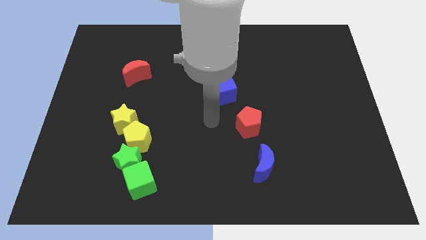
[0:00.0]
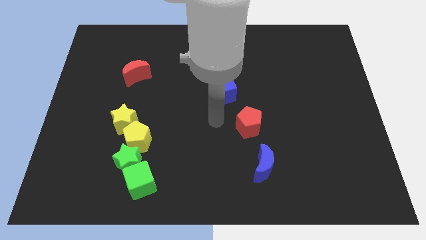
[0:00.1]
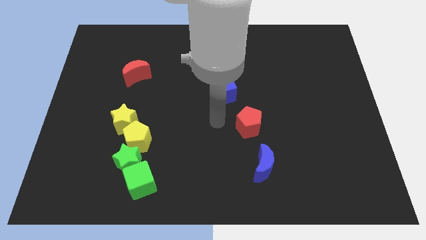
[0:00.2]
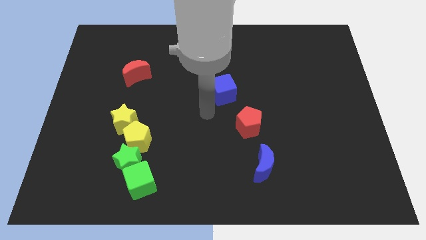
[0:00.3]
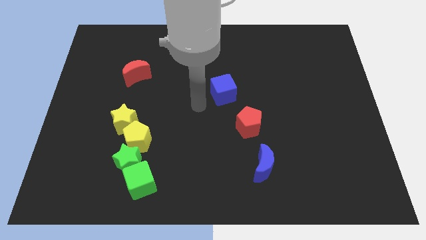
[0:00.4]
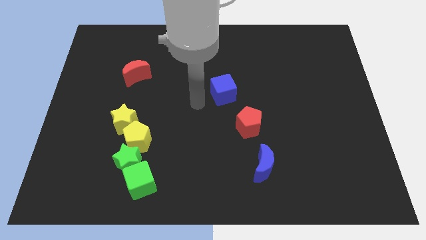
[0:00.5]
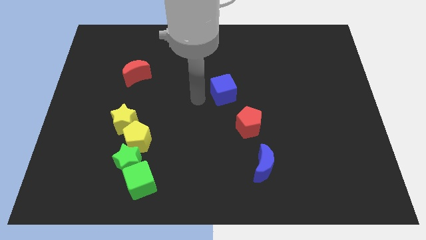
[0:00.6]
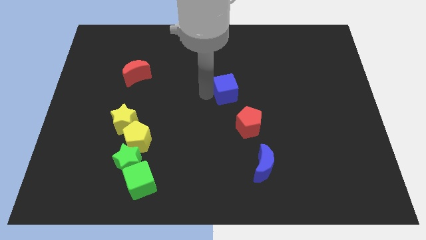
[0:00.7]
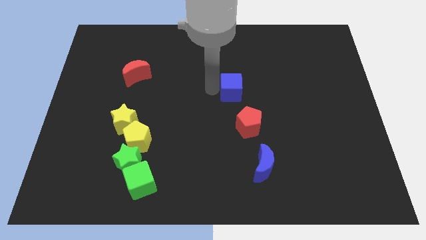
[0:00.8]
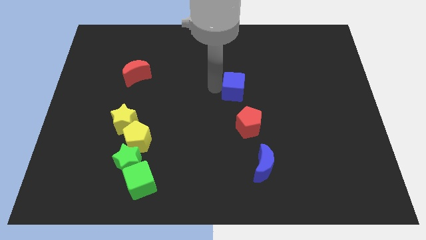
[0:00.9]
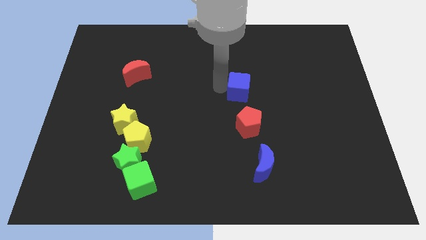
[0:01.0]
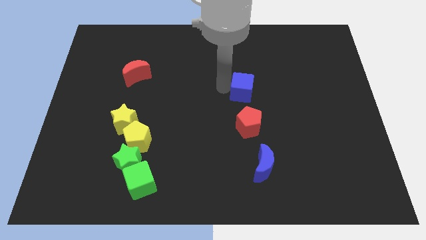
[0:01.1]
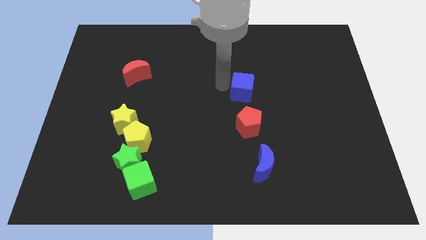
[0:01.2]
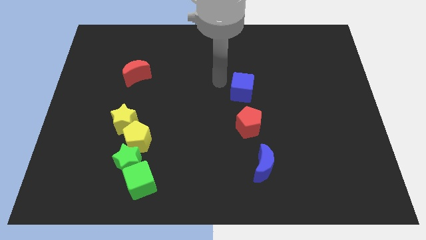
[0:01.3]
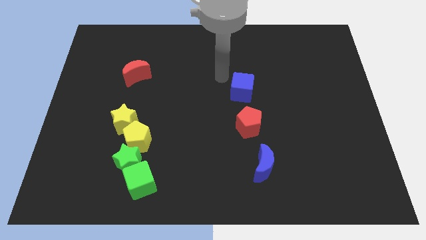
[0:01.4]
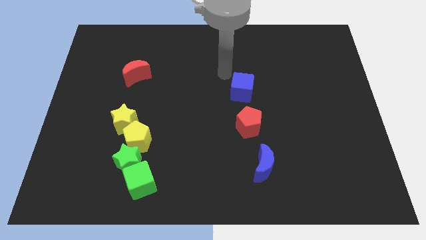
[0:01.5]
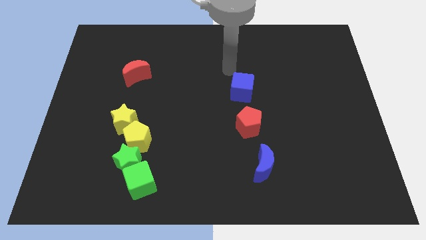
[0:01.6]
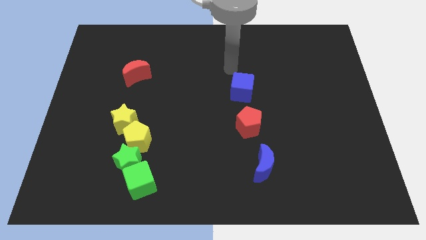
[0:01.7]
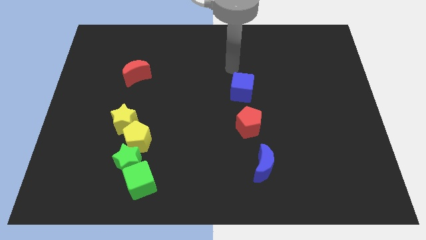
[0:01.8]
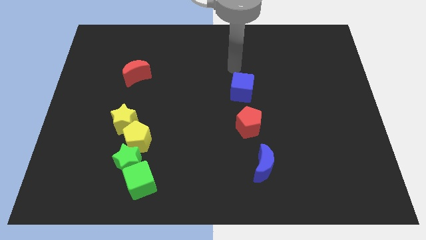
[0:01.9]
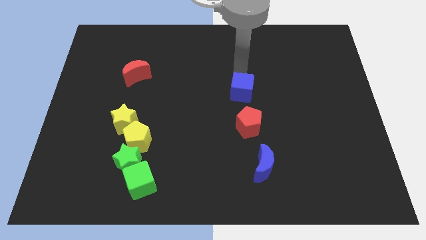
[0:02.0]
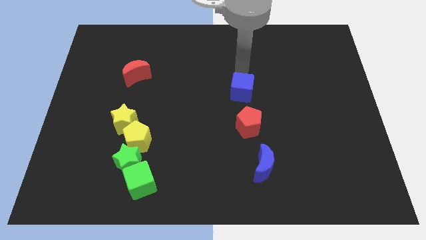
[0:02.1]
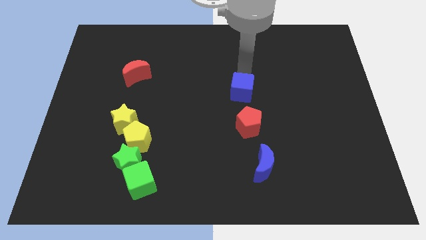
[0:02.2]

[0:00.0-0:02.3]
place the blue cube above the red pentagon

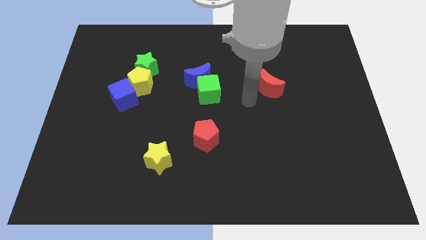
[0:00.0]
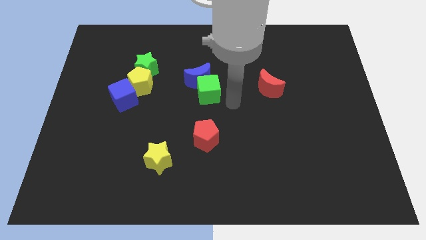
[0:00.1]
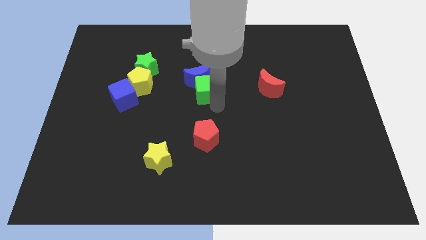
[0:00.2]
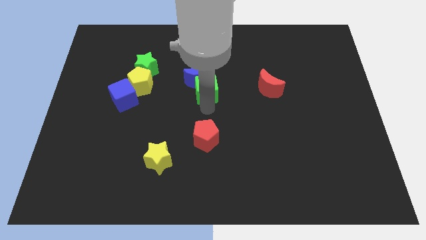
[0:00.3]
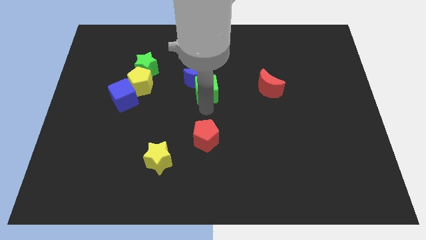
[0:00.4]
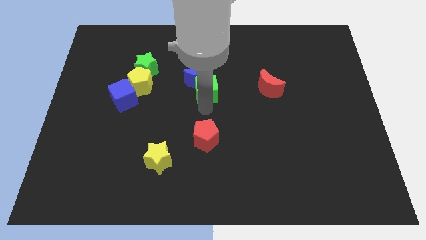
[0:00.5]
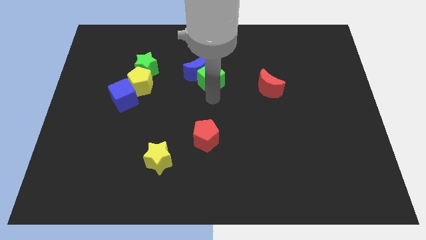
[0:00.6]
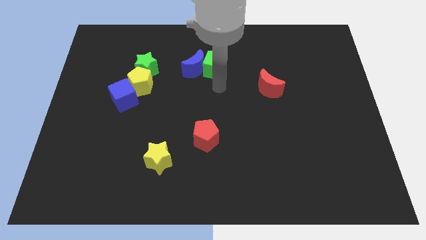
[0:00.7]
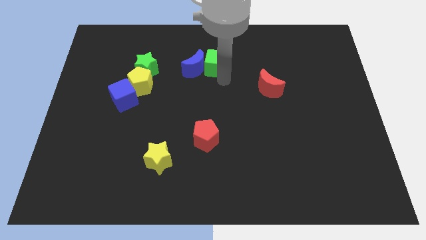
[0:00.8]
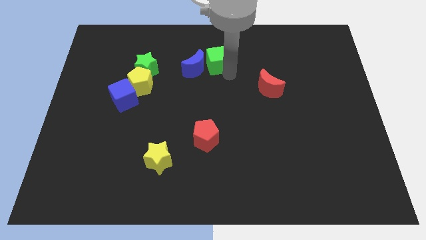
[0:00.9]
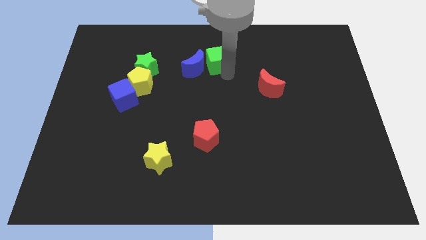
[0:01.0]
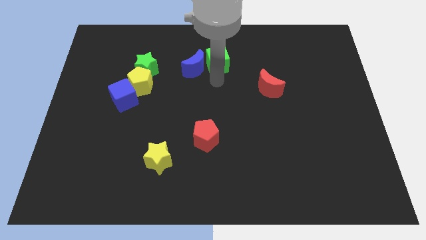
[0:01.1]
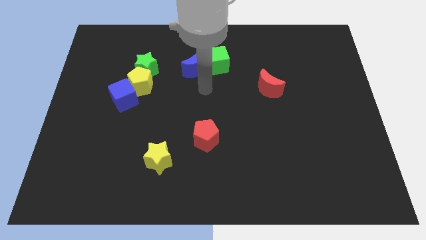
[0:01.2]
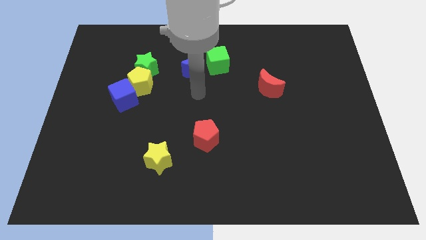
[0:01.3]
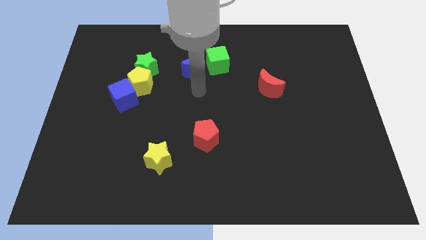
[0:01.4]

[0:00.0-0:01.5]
separate green cube from the blue moon

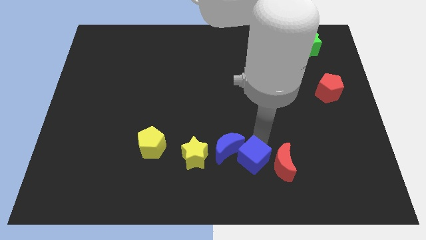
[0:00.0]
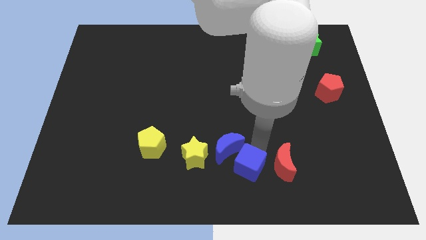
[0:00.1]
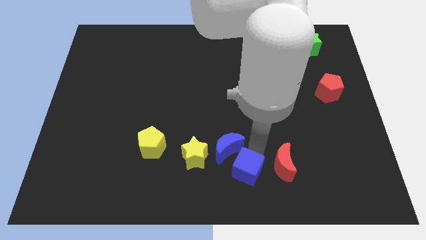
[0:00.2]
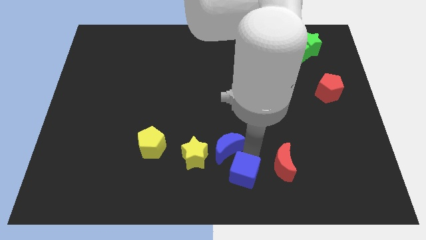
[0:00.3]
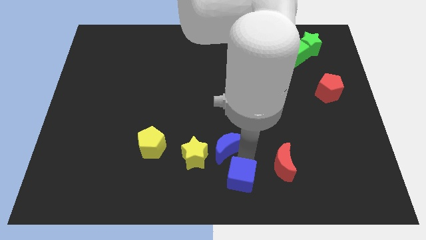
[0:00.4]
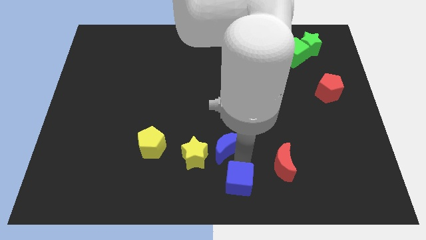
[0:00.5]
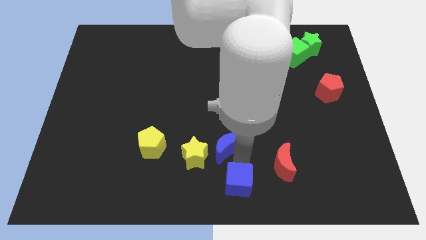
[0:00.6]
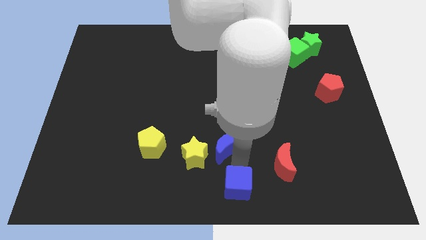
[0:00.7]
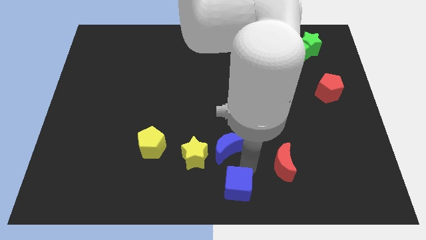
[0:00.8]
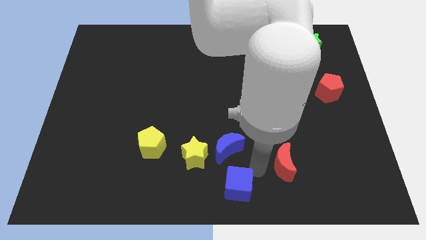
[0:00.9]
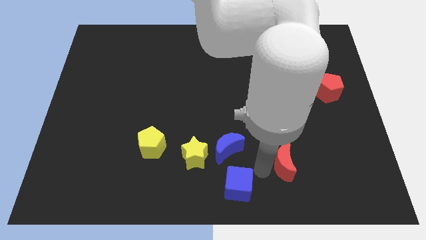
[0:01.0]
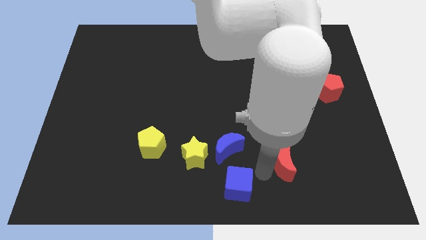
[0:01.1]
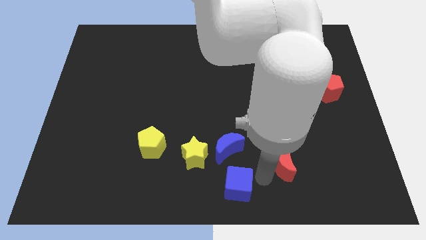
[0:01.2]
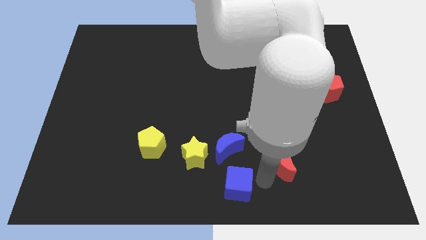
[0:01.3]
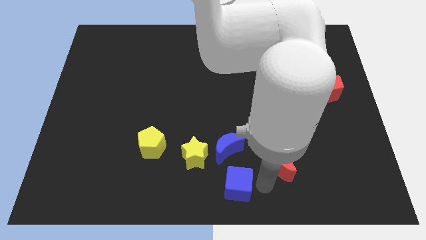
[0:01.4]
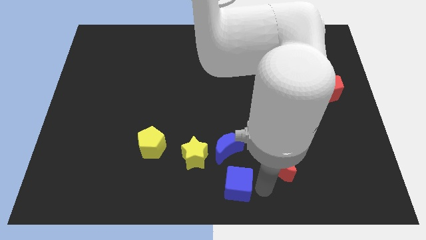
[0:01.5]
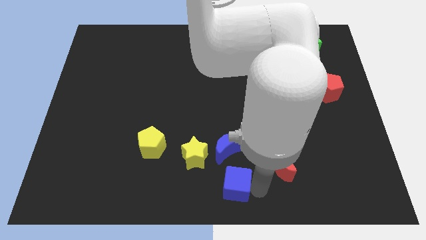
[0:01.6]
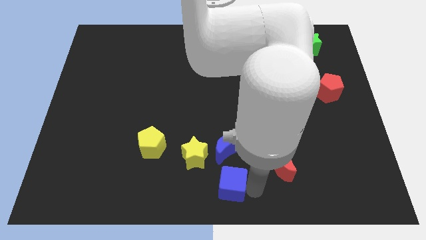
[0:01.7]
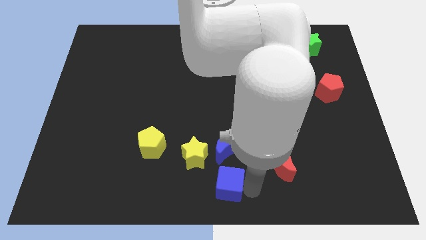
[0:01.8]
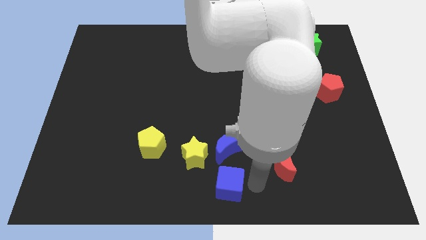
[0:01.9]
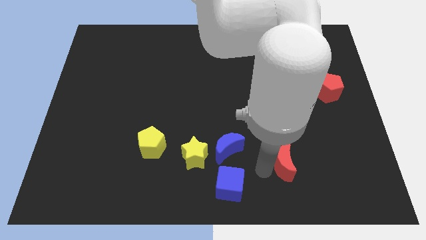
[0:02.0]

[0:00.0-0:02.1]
place the blue cube below the blue moon

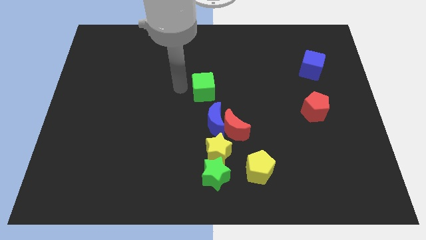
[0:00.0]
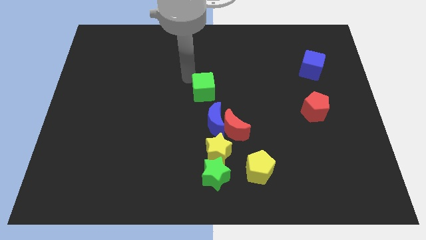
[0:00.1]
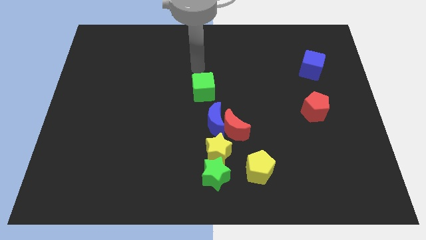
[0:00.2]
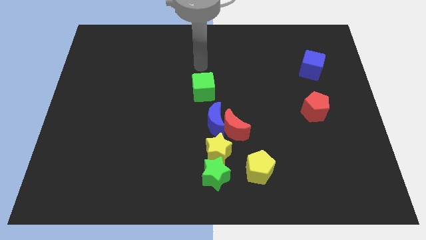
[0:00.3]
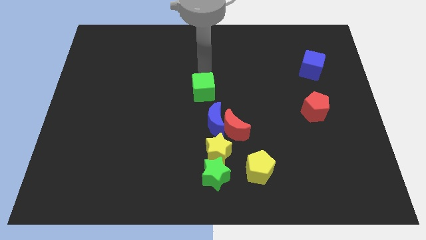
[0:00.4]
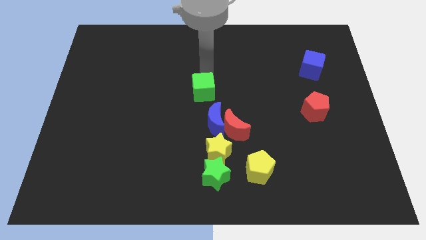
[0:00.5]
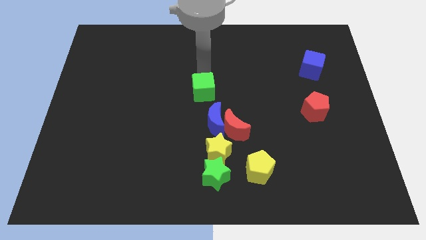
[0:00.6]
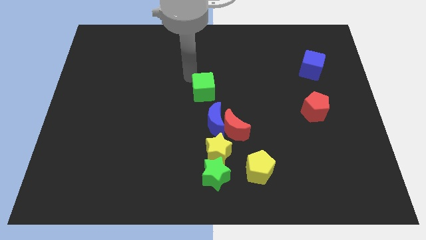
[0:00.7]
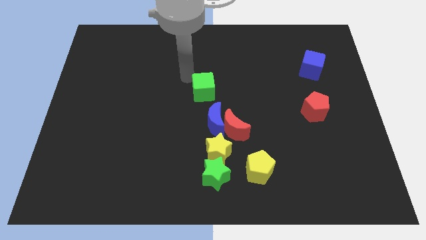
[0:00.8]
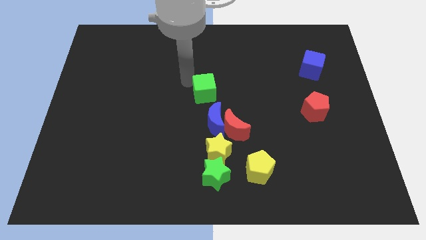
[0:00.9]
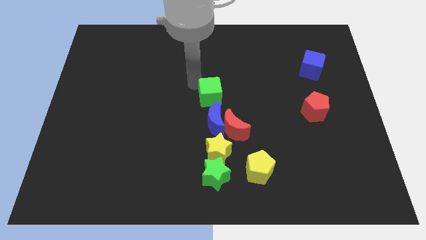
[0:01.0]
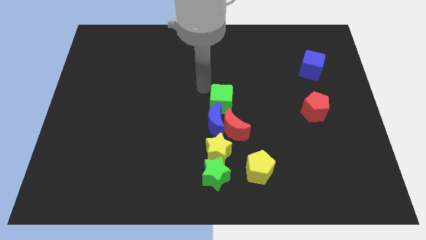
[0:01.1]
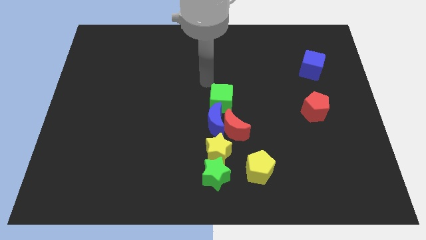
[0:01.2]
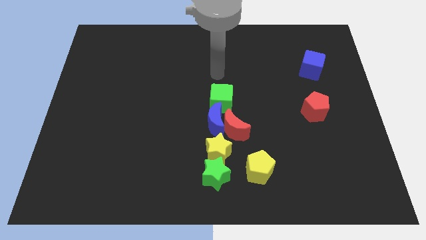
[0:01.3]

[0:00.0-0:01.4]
move the green cube towards the blue crescent

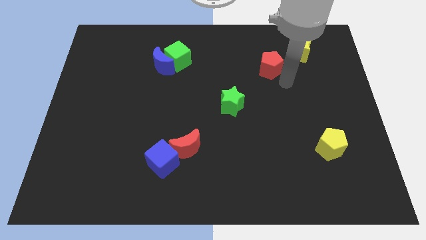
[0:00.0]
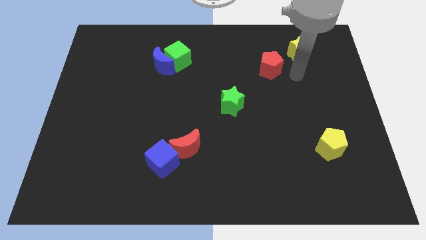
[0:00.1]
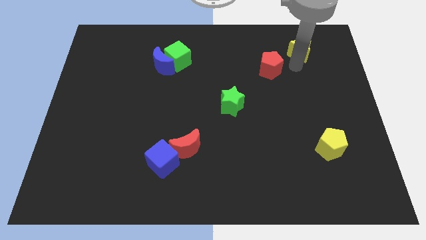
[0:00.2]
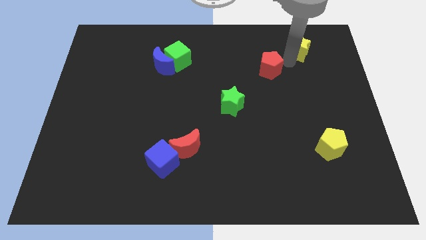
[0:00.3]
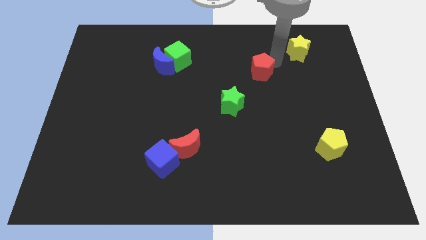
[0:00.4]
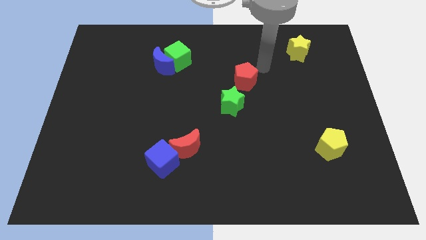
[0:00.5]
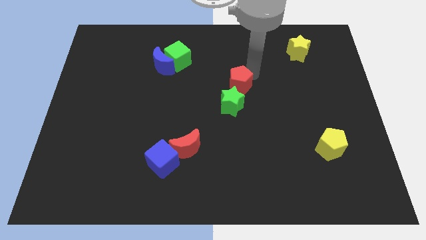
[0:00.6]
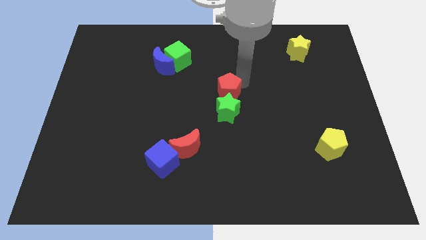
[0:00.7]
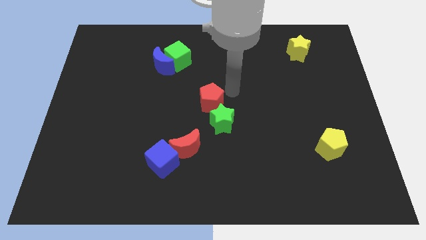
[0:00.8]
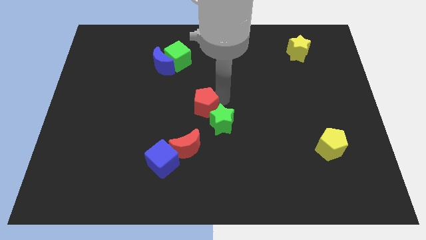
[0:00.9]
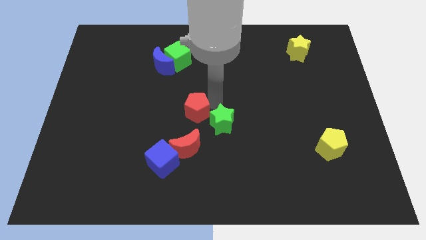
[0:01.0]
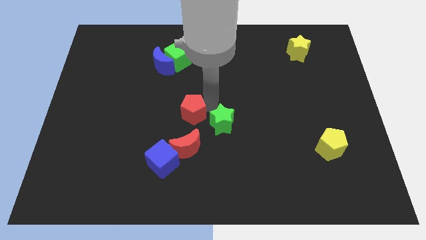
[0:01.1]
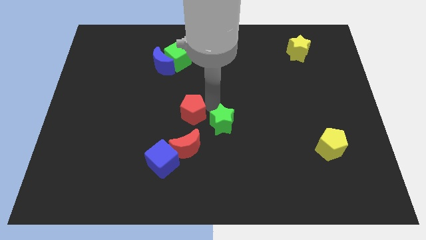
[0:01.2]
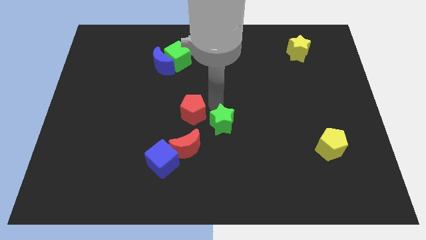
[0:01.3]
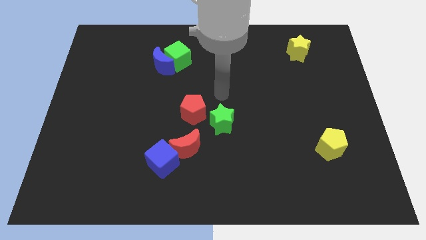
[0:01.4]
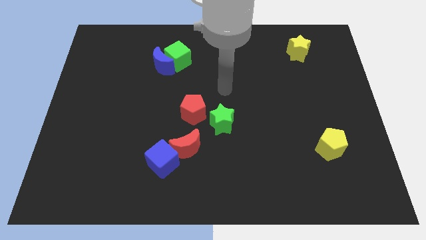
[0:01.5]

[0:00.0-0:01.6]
push the red pentagon to the top side of red moon
